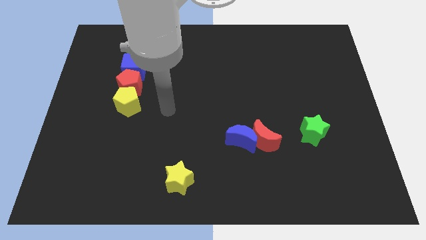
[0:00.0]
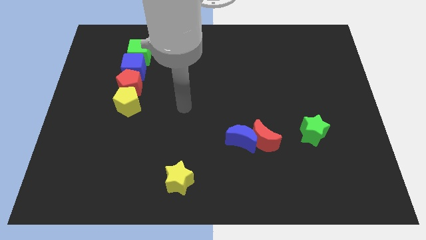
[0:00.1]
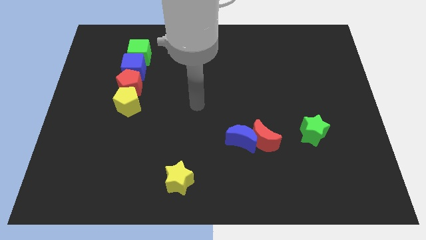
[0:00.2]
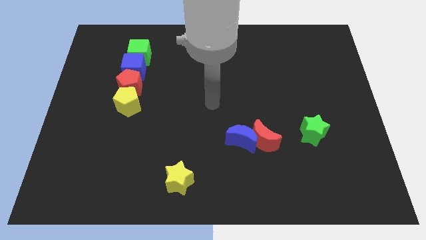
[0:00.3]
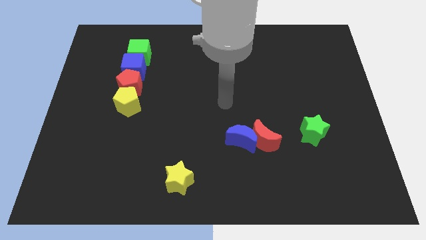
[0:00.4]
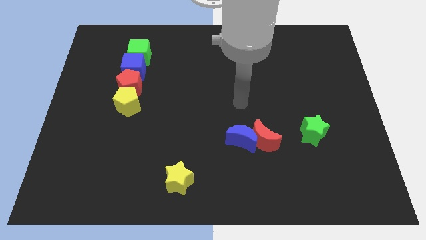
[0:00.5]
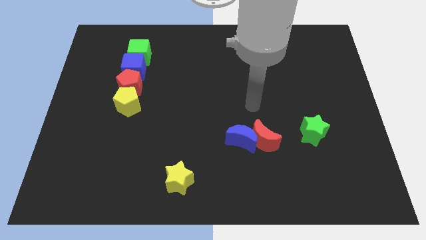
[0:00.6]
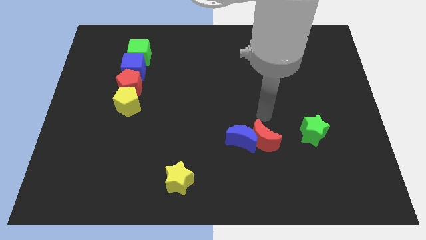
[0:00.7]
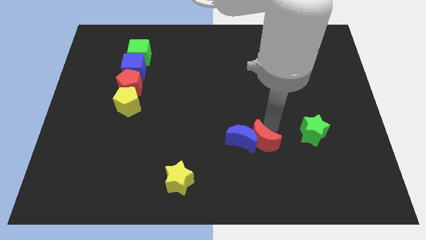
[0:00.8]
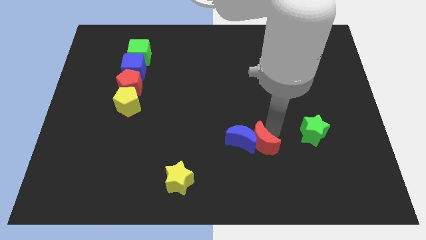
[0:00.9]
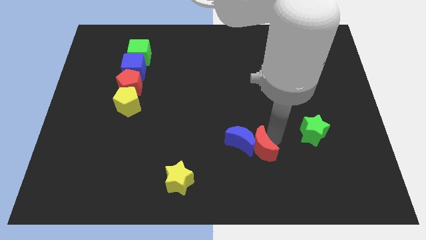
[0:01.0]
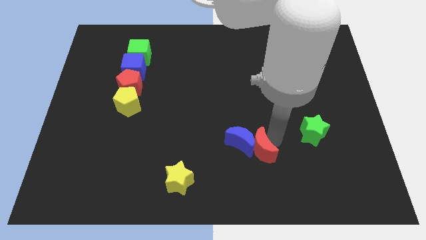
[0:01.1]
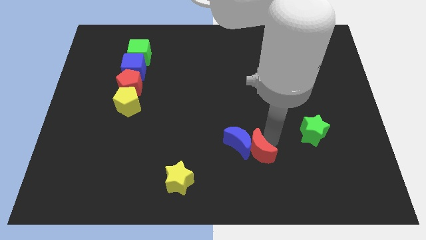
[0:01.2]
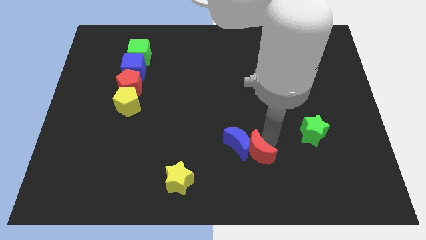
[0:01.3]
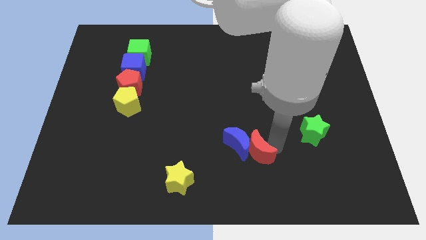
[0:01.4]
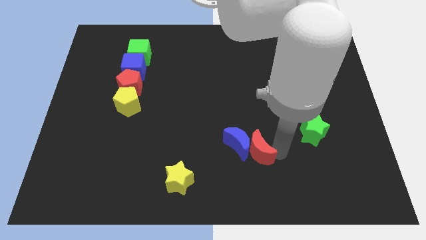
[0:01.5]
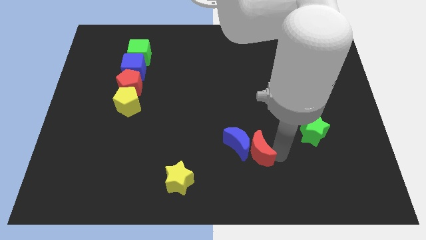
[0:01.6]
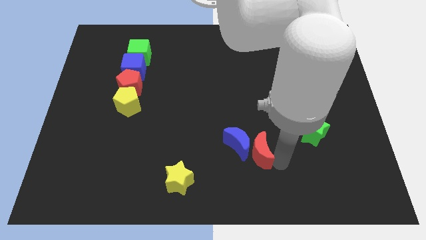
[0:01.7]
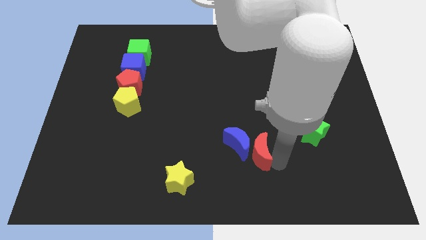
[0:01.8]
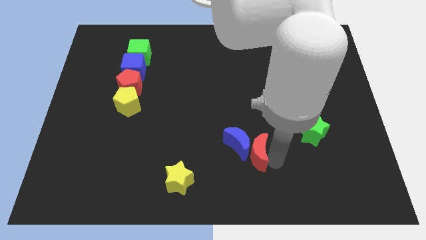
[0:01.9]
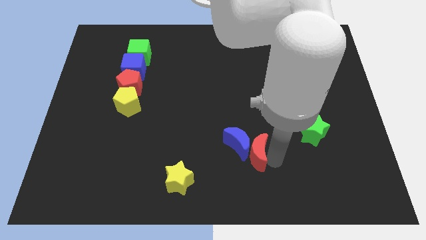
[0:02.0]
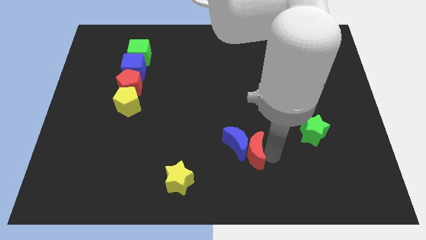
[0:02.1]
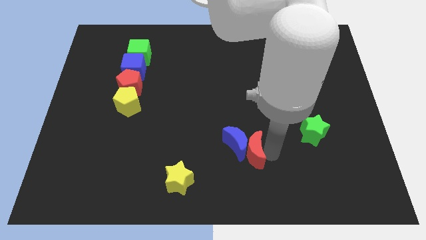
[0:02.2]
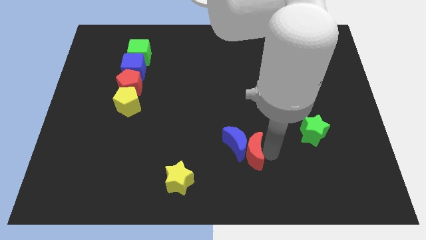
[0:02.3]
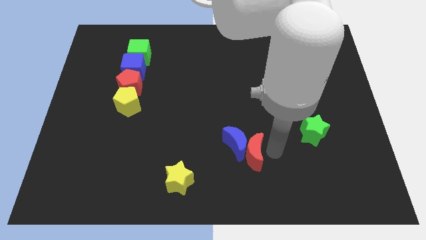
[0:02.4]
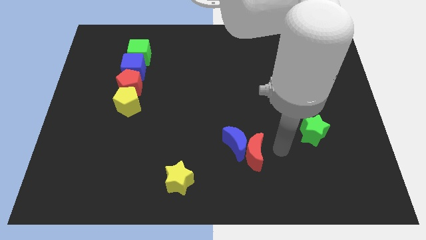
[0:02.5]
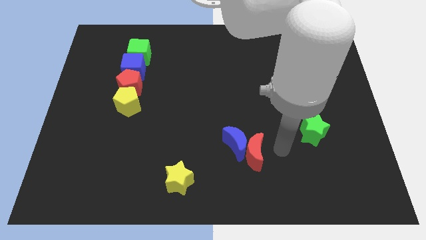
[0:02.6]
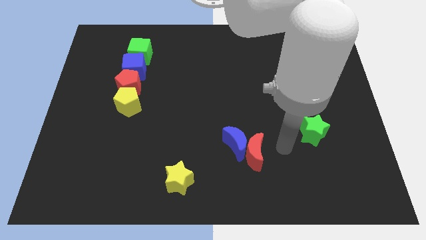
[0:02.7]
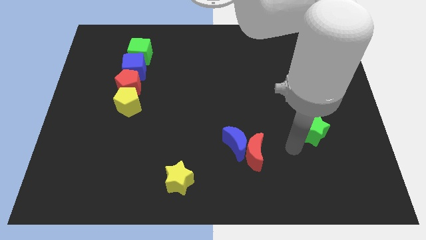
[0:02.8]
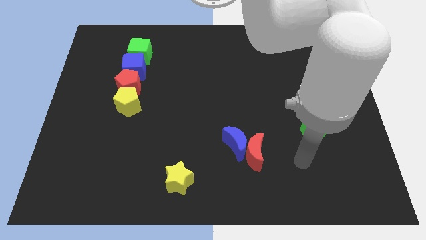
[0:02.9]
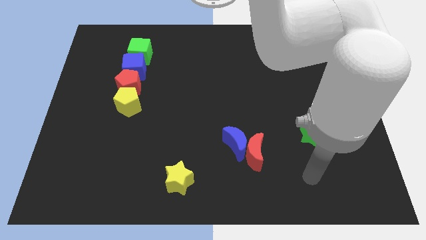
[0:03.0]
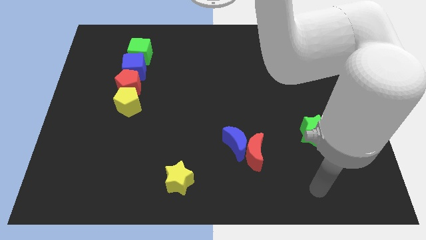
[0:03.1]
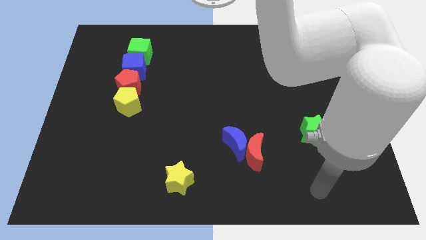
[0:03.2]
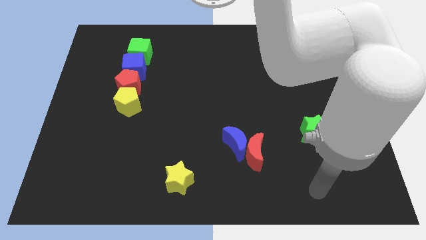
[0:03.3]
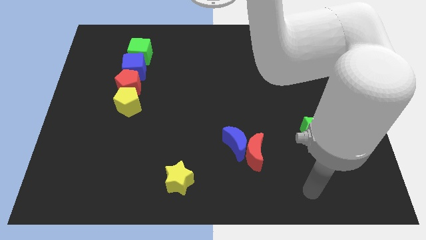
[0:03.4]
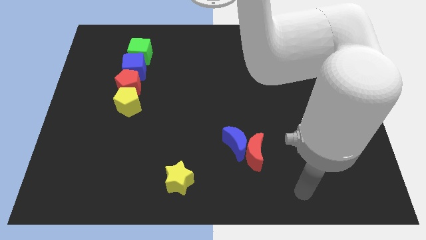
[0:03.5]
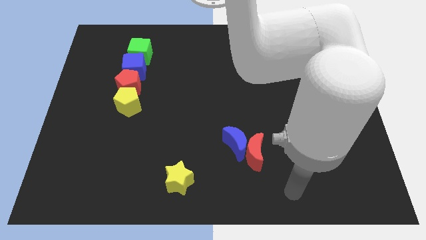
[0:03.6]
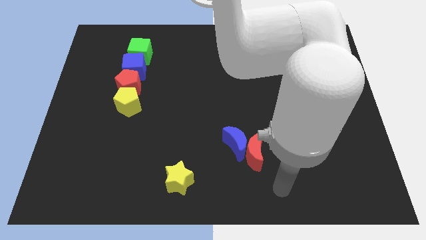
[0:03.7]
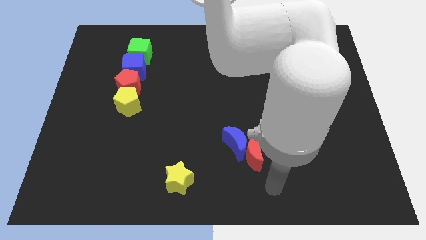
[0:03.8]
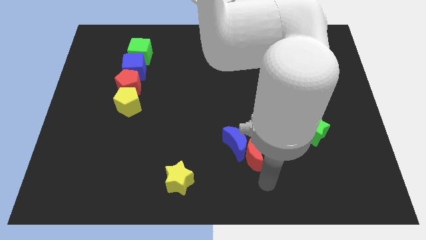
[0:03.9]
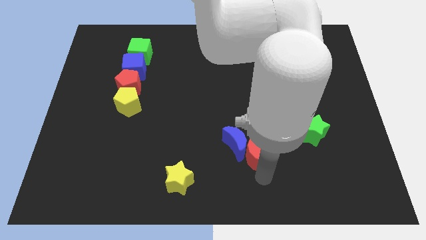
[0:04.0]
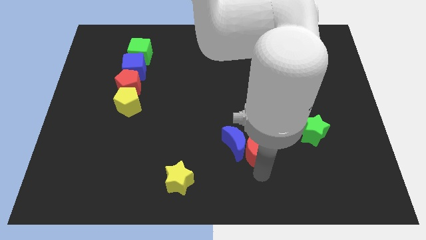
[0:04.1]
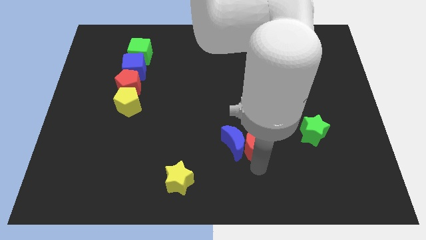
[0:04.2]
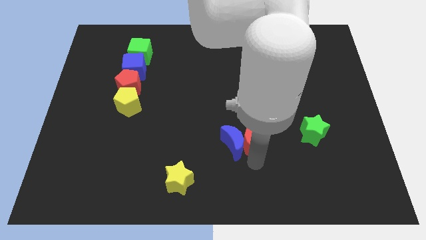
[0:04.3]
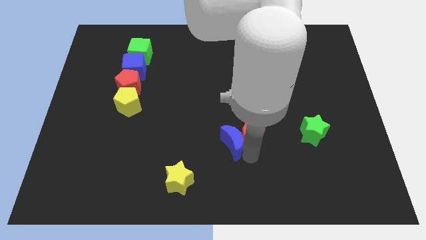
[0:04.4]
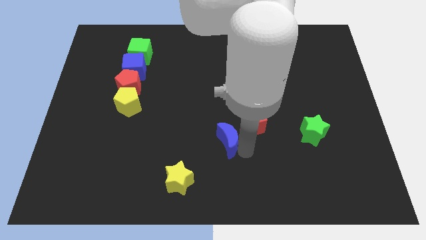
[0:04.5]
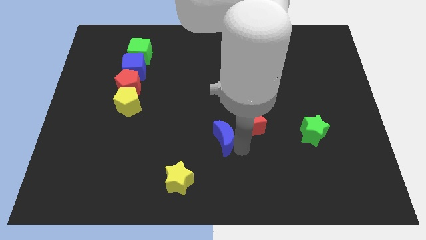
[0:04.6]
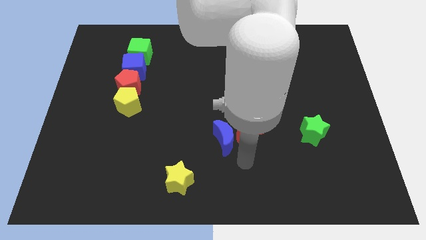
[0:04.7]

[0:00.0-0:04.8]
slightly move the red moon and blue moon downwards

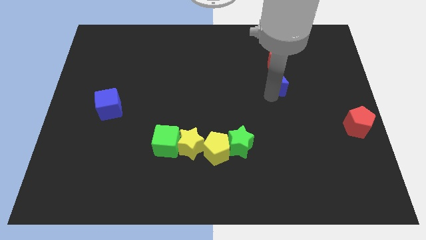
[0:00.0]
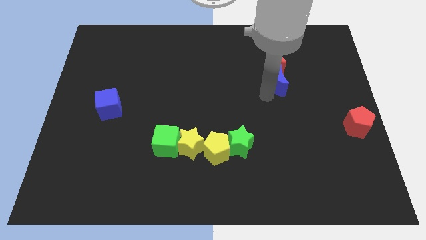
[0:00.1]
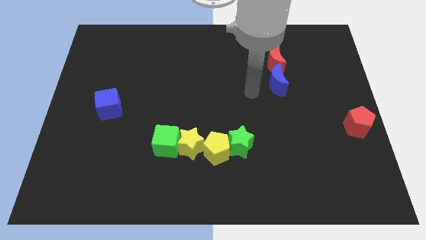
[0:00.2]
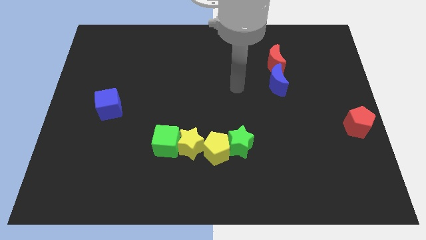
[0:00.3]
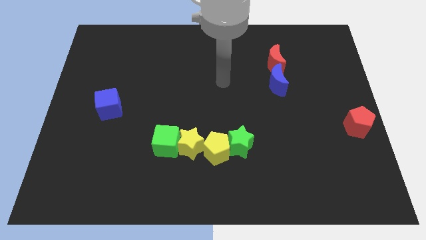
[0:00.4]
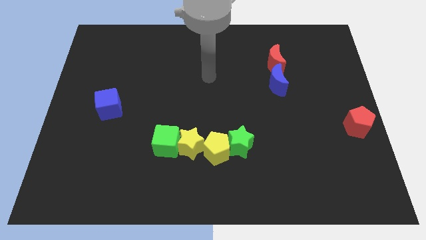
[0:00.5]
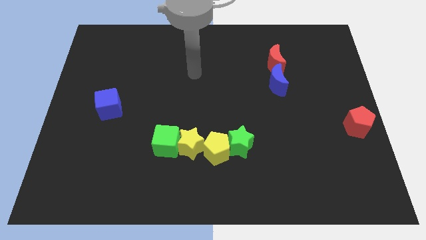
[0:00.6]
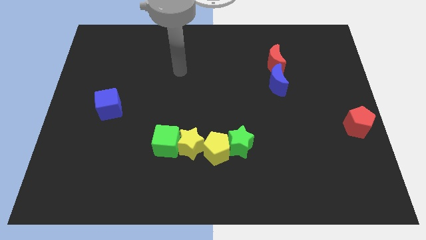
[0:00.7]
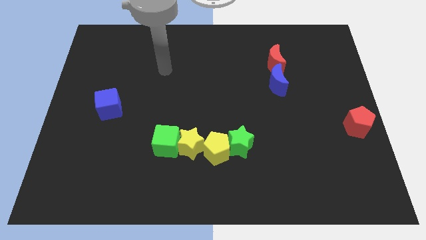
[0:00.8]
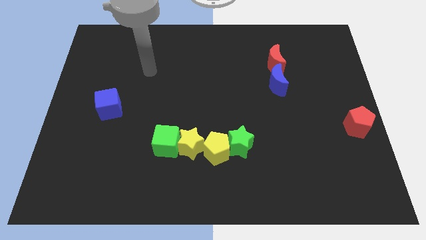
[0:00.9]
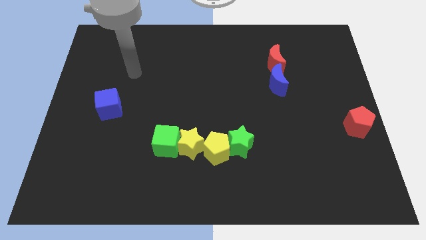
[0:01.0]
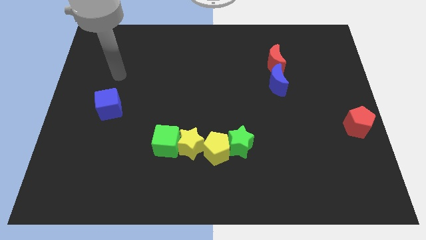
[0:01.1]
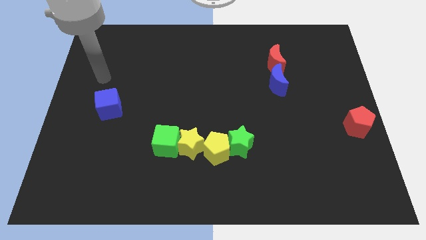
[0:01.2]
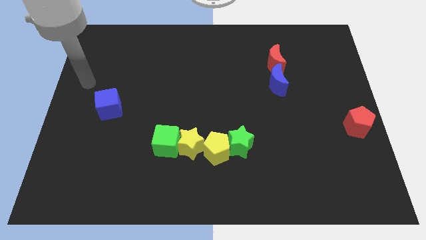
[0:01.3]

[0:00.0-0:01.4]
go away from the blue moon

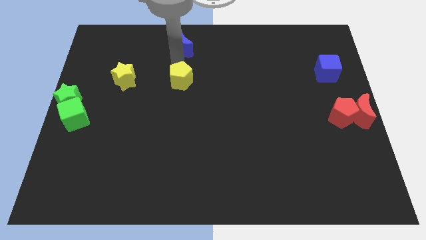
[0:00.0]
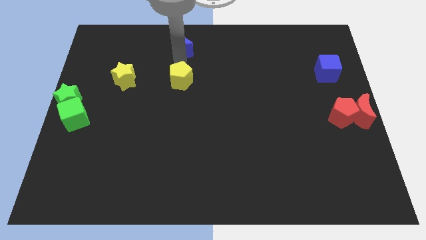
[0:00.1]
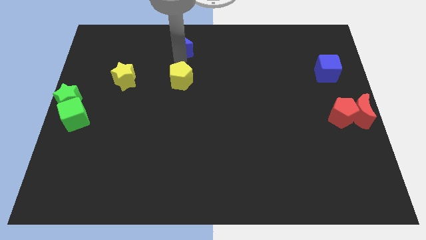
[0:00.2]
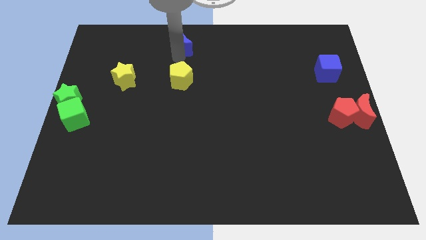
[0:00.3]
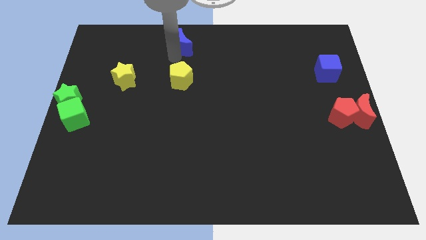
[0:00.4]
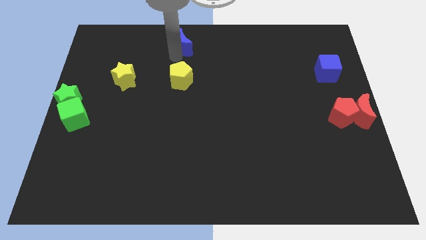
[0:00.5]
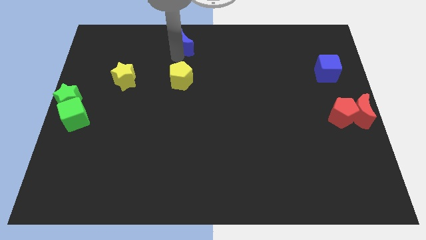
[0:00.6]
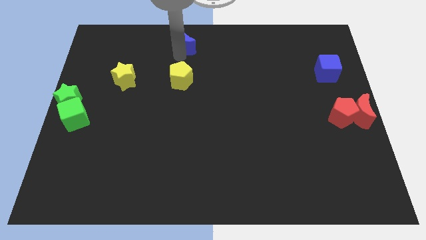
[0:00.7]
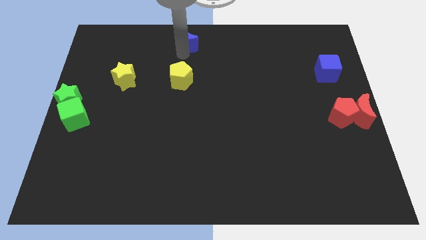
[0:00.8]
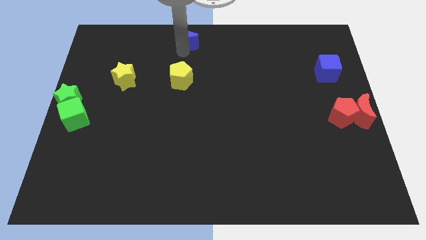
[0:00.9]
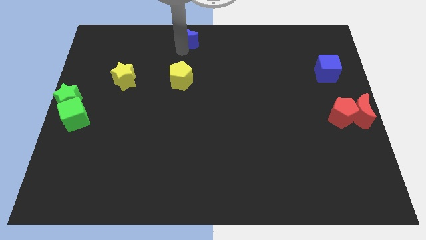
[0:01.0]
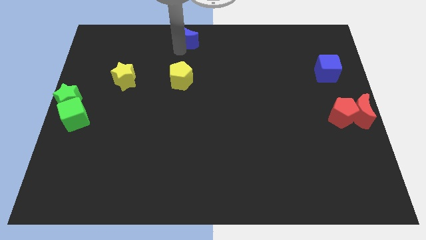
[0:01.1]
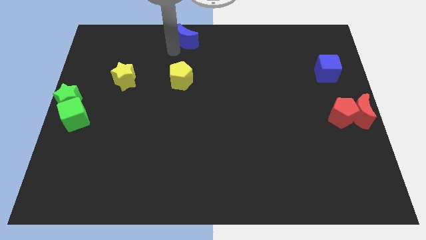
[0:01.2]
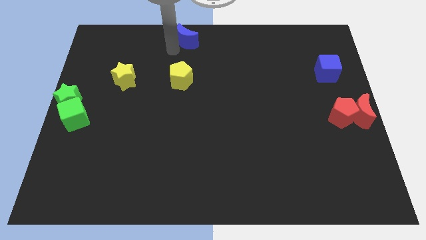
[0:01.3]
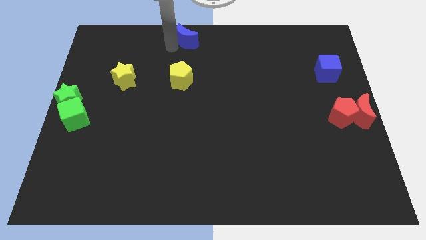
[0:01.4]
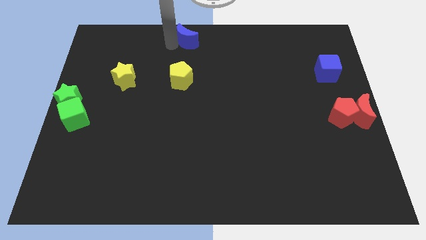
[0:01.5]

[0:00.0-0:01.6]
slightly move the blue moon to the top centre of the board

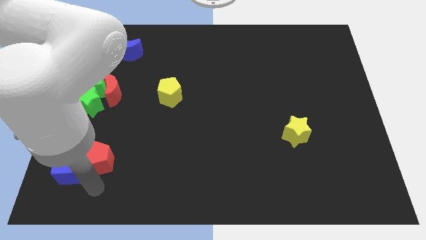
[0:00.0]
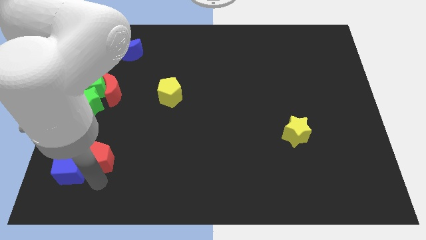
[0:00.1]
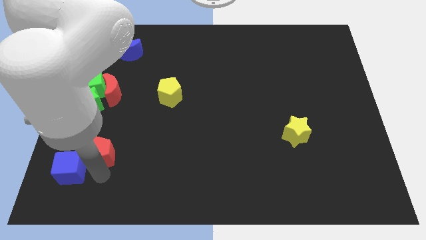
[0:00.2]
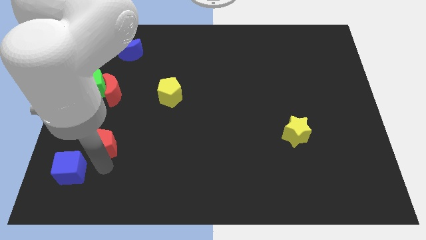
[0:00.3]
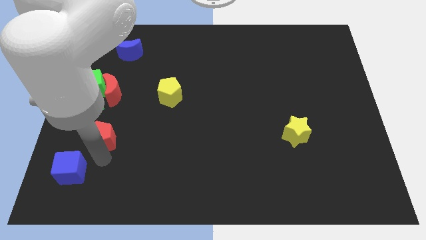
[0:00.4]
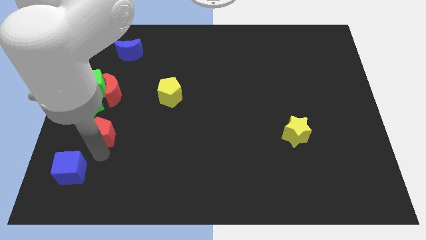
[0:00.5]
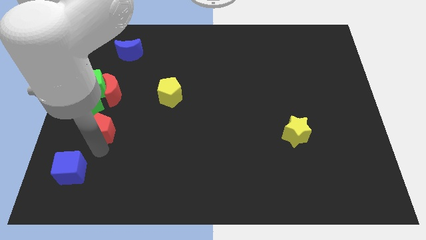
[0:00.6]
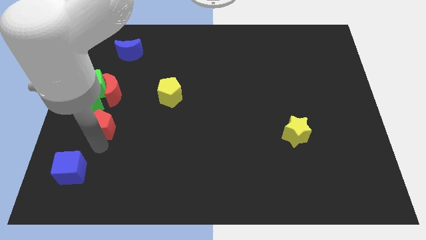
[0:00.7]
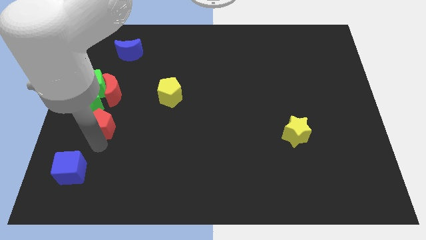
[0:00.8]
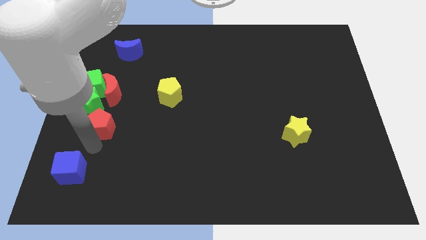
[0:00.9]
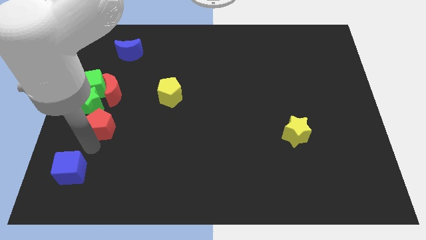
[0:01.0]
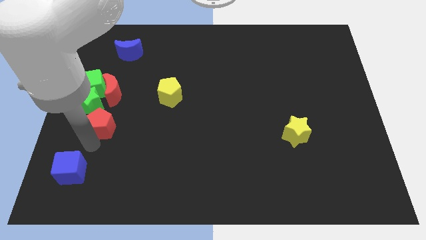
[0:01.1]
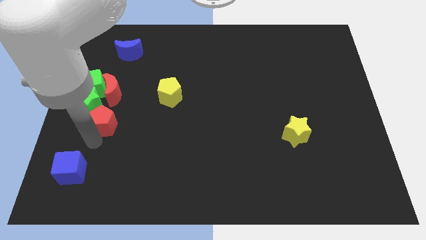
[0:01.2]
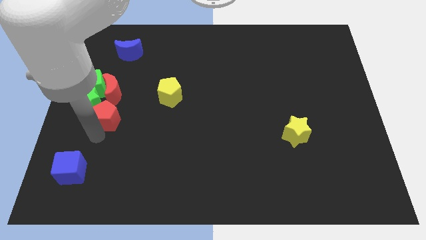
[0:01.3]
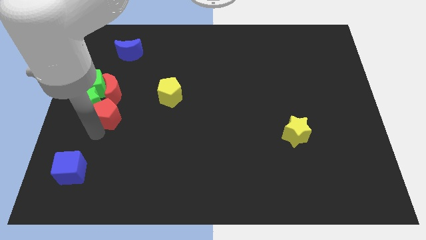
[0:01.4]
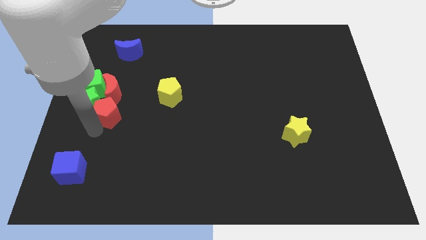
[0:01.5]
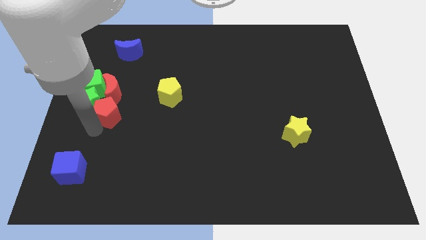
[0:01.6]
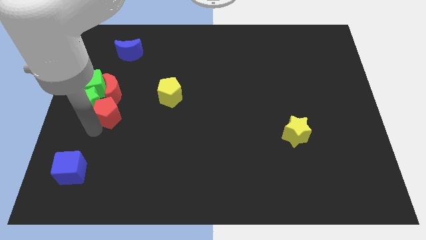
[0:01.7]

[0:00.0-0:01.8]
move the red pentagon close to the bottom of the red moon
